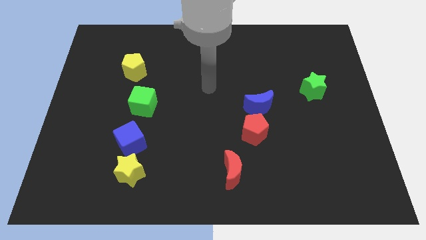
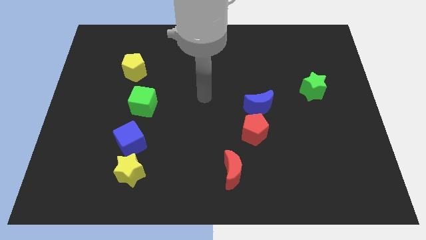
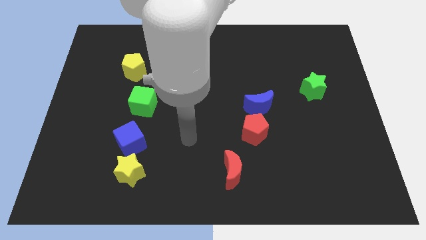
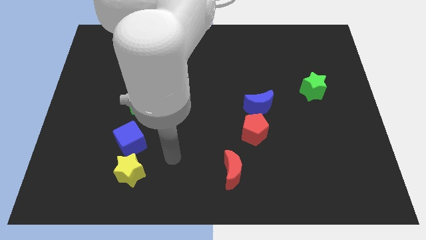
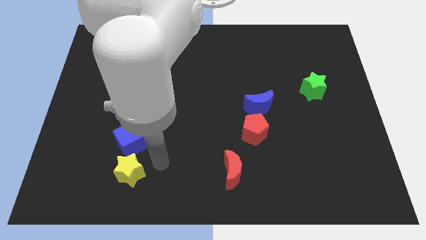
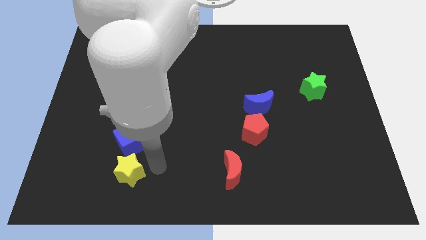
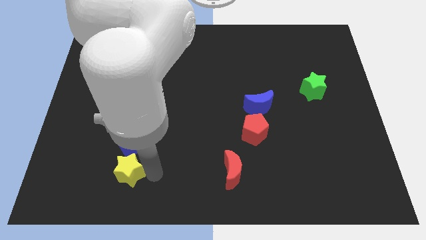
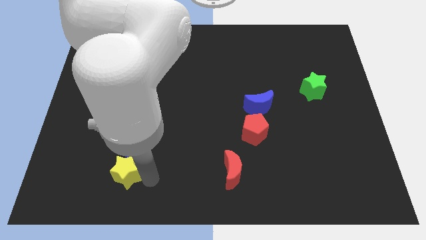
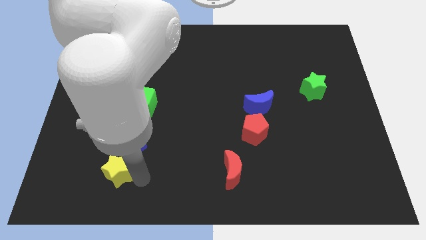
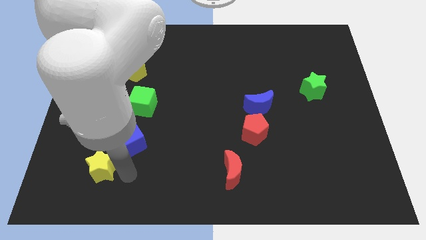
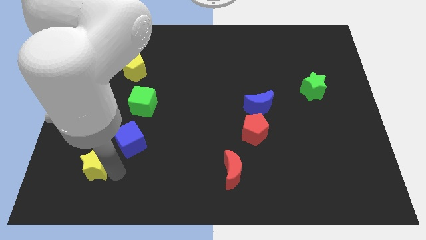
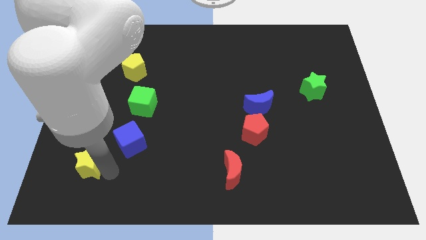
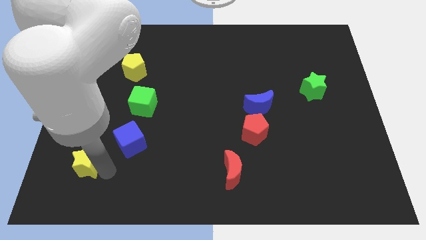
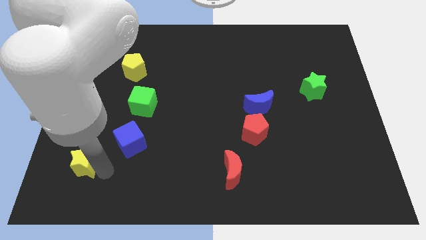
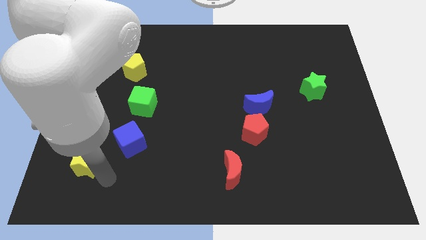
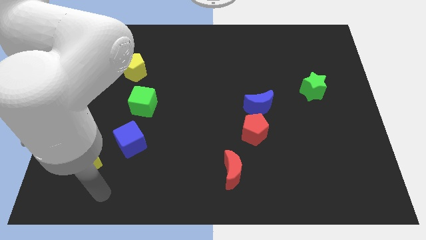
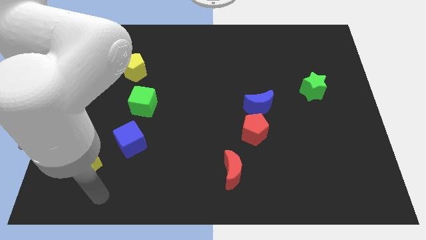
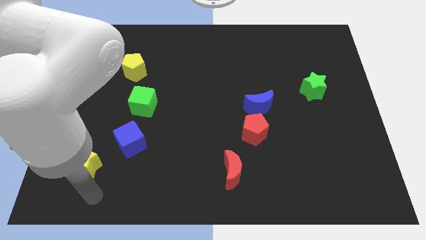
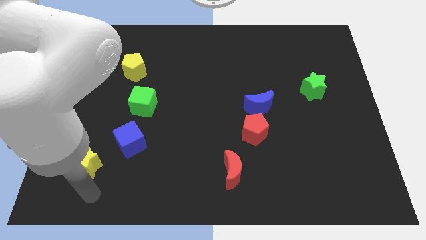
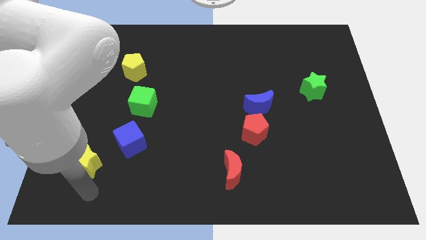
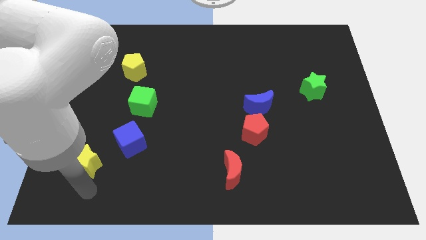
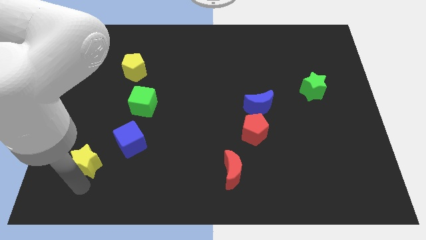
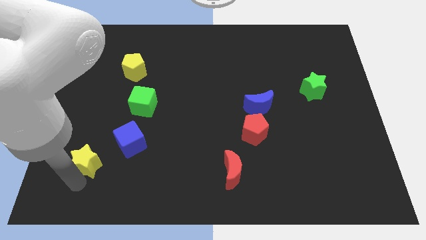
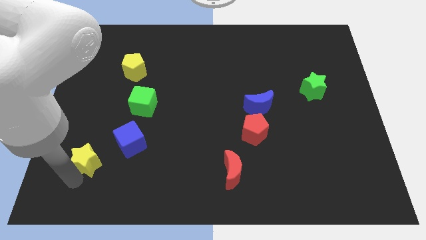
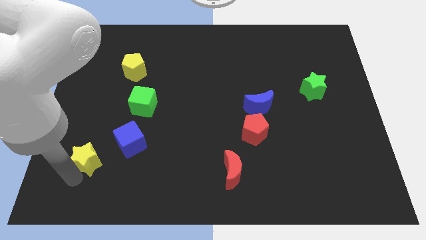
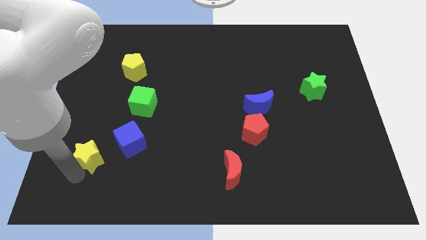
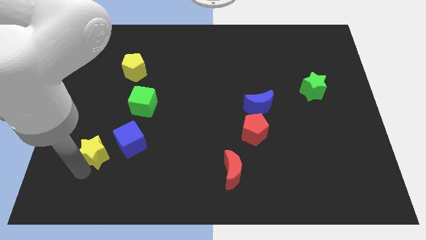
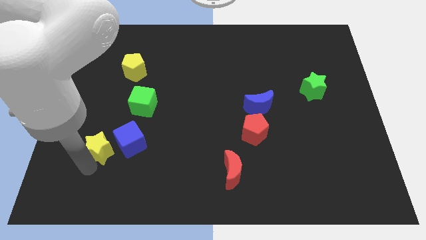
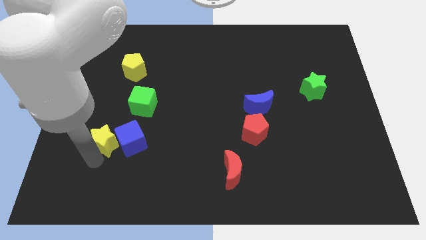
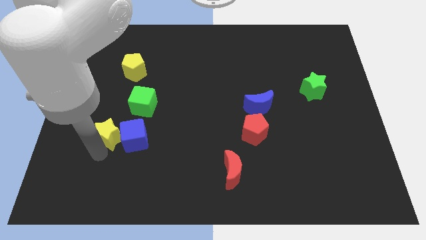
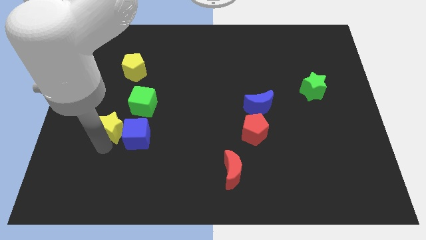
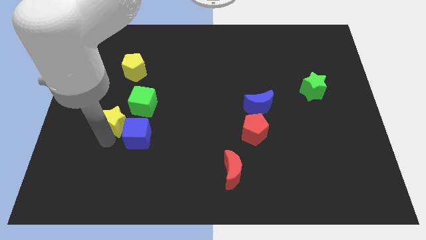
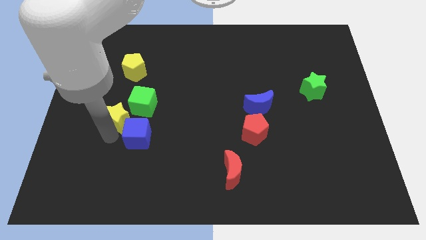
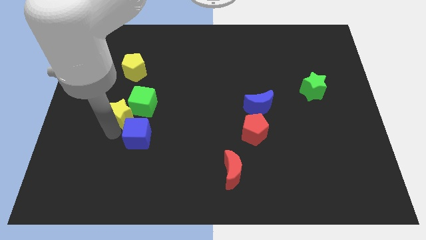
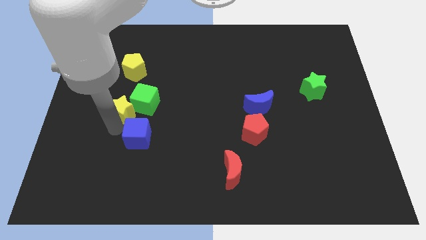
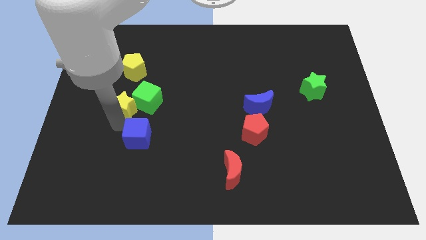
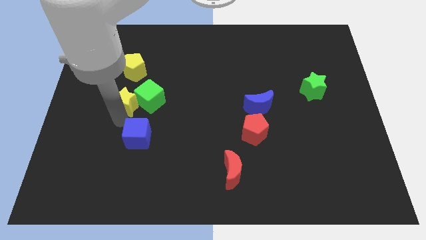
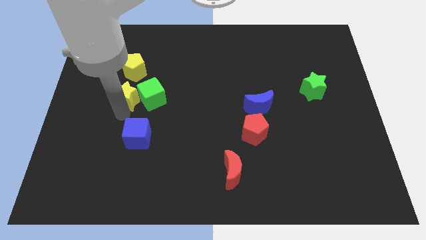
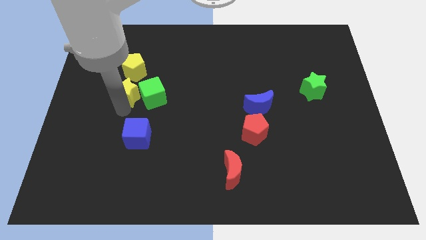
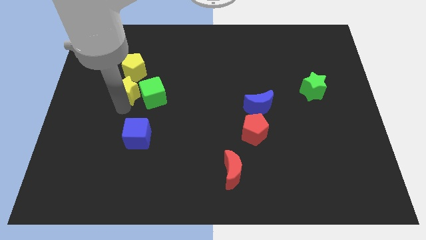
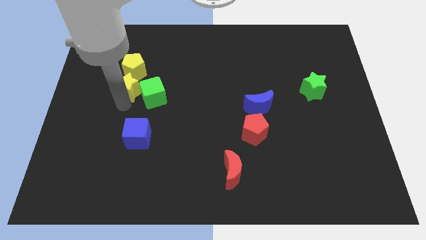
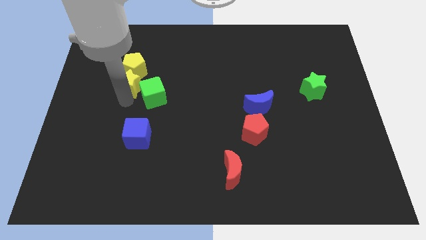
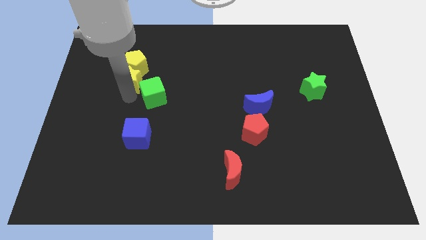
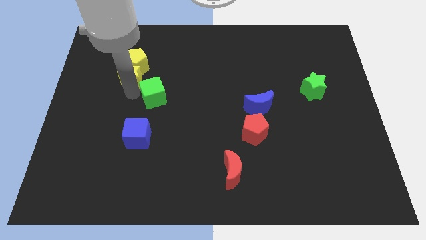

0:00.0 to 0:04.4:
slide the yellow star close to the yellow pentagon

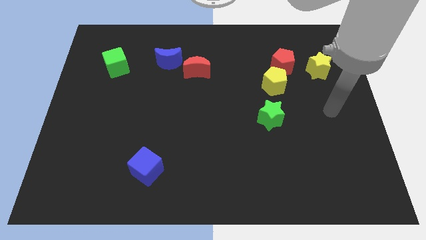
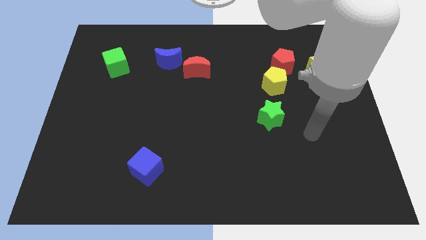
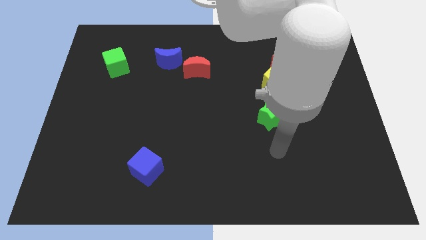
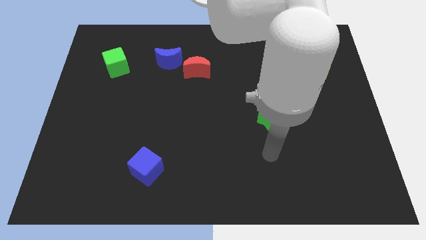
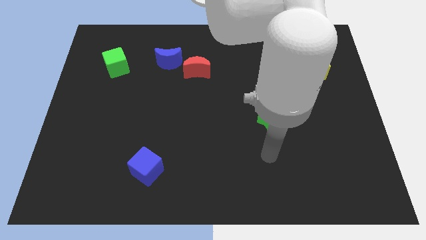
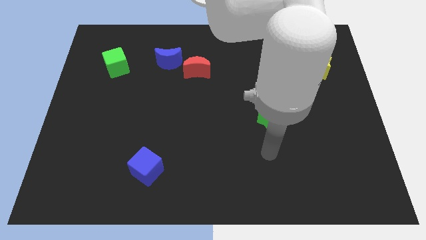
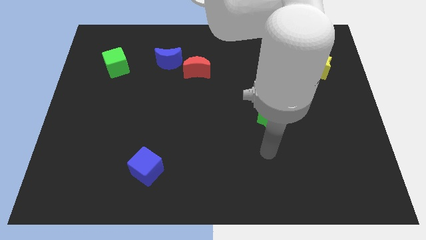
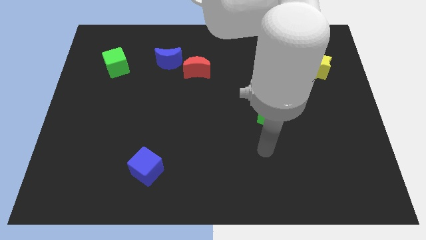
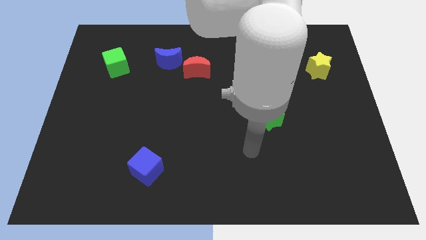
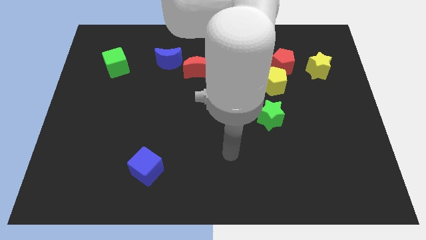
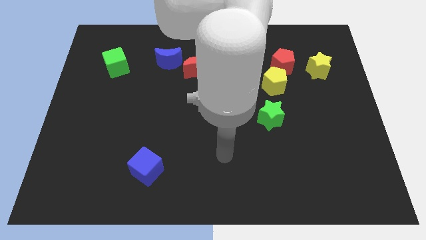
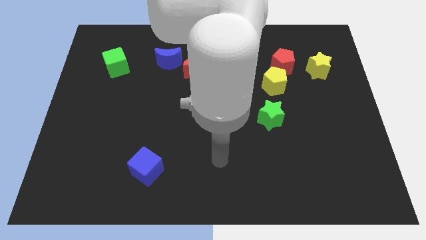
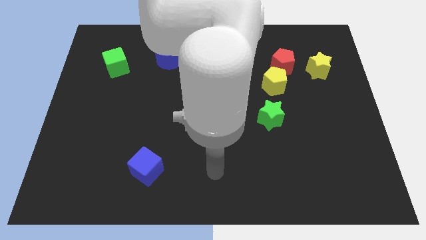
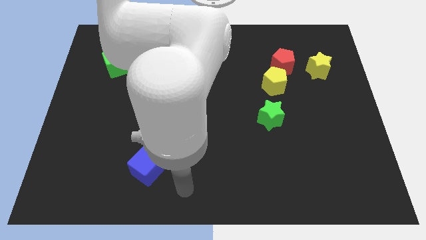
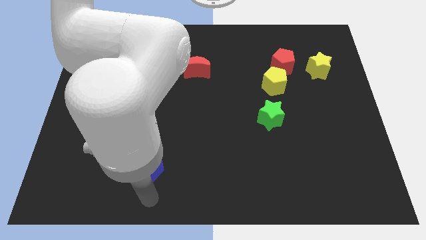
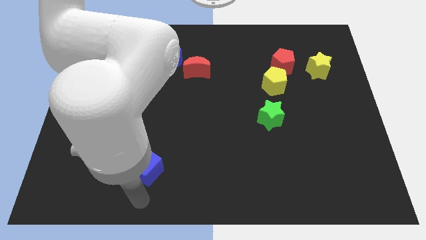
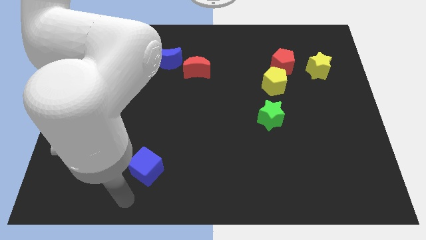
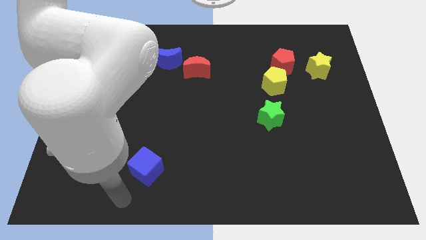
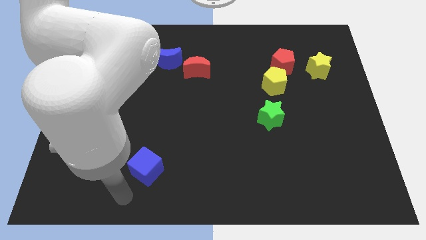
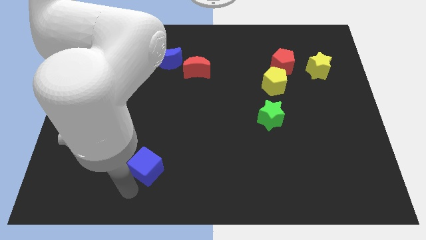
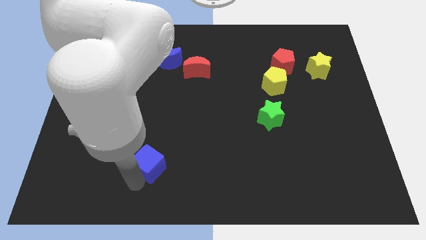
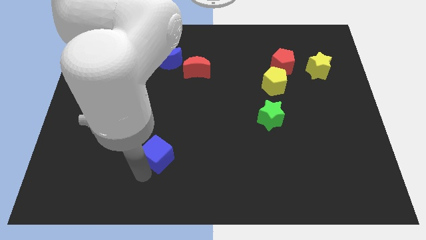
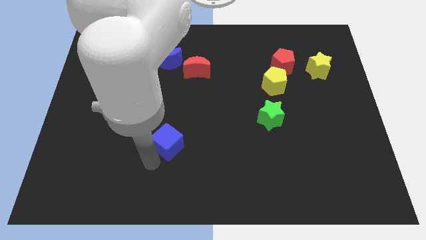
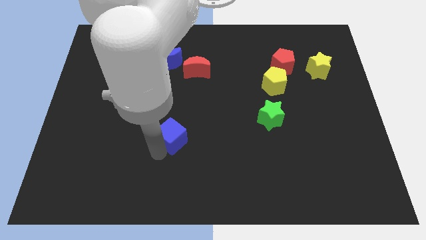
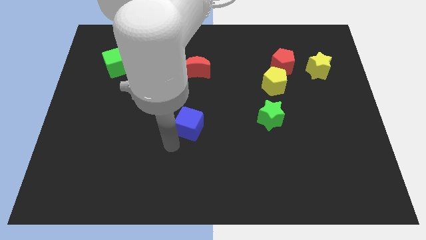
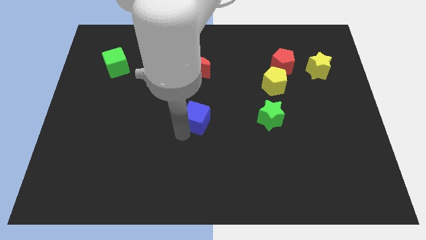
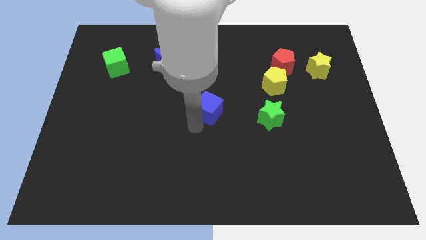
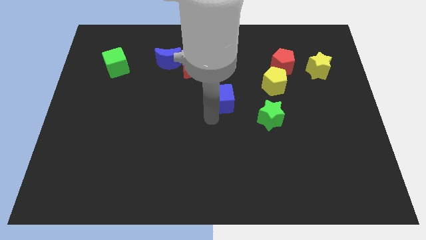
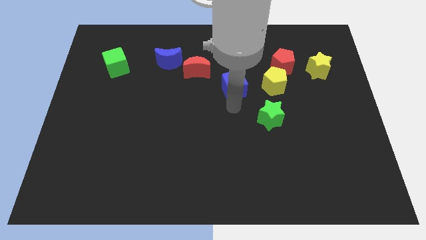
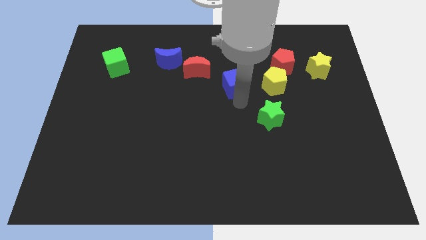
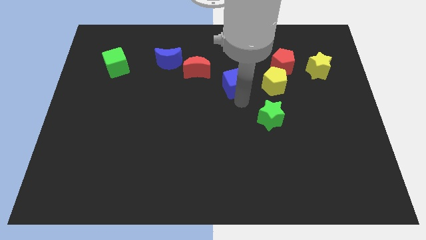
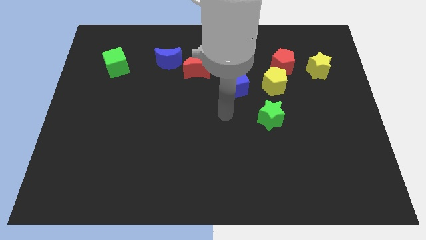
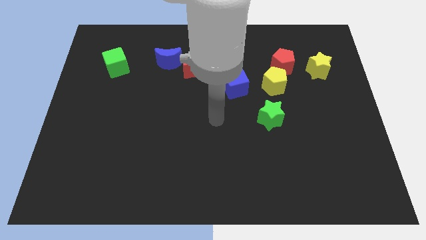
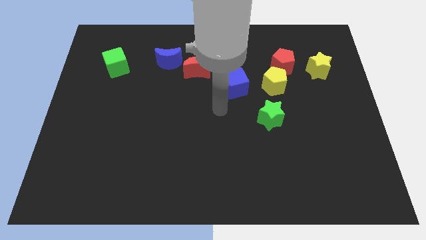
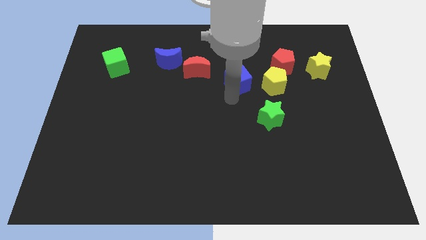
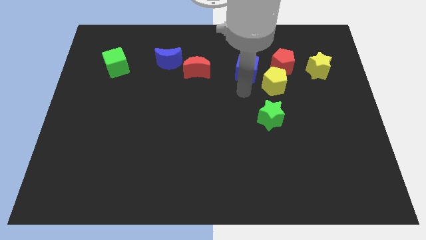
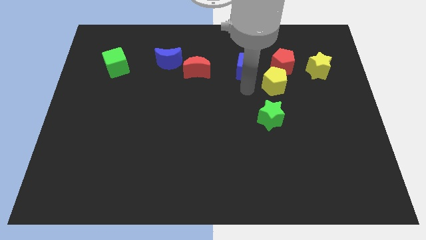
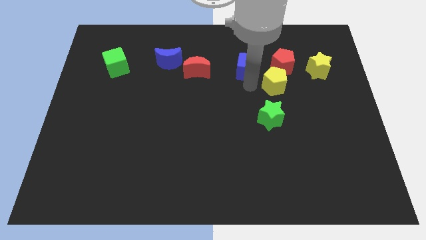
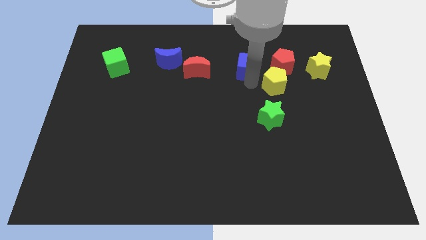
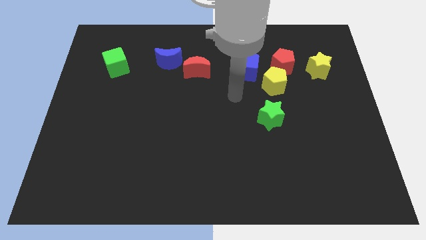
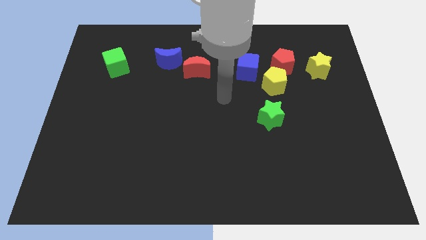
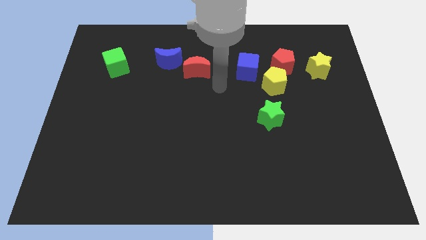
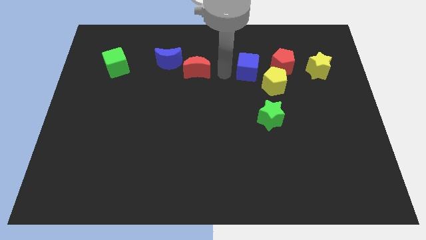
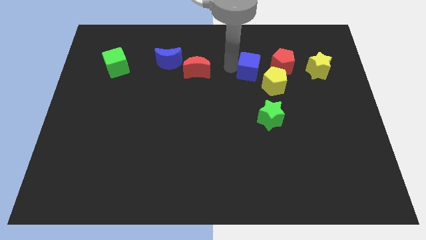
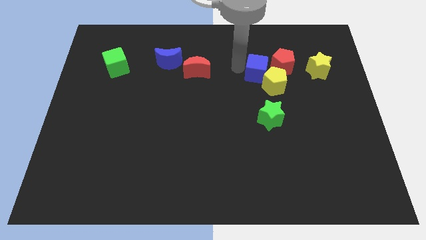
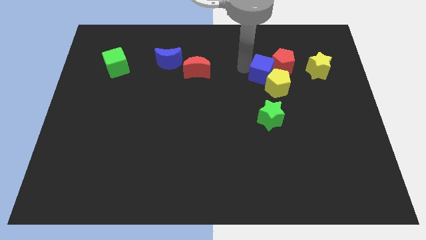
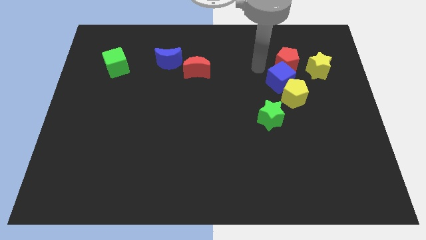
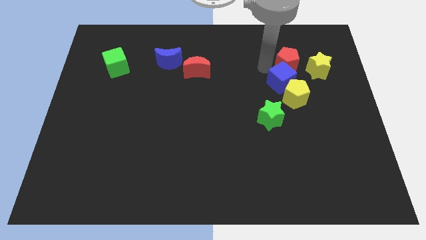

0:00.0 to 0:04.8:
push the blue cube next to the red pentagon
